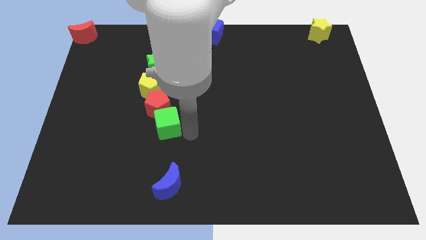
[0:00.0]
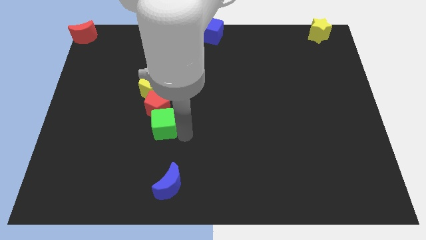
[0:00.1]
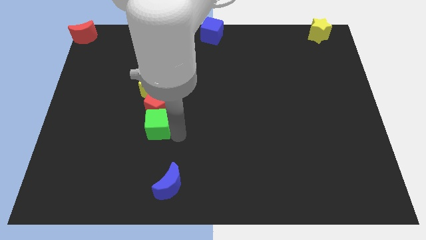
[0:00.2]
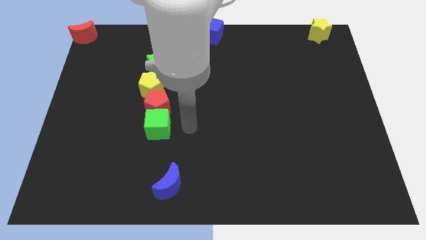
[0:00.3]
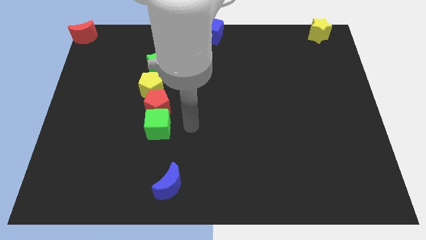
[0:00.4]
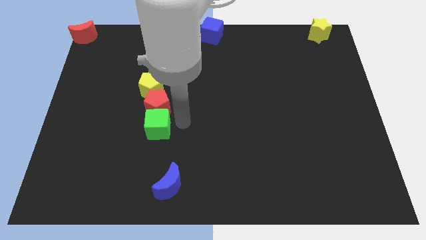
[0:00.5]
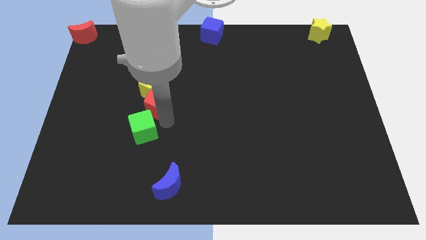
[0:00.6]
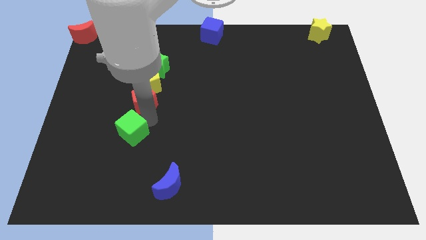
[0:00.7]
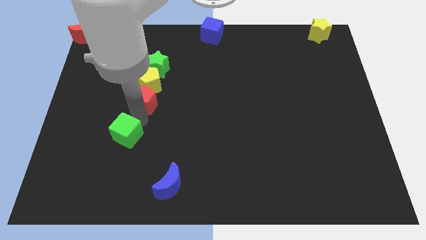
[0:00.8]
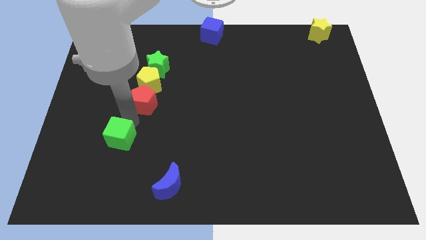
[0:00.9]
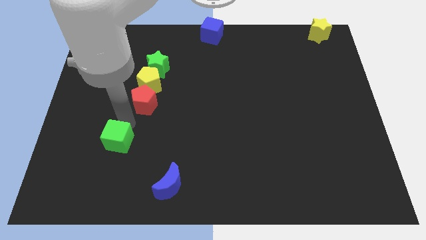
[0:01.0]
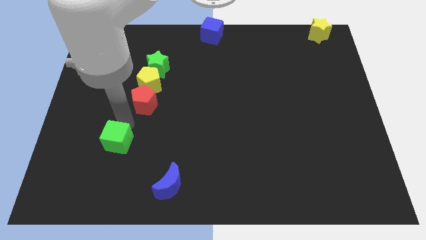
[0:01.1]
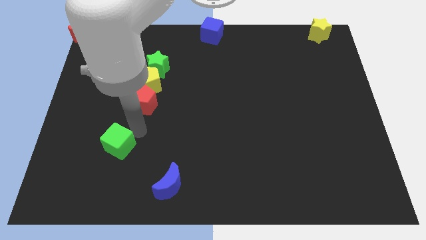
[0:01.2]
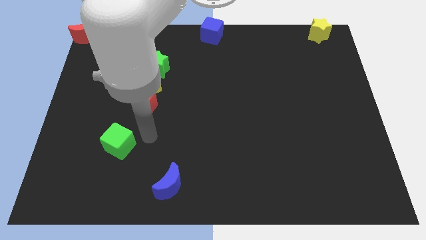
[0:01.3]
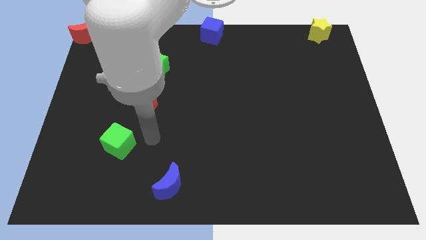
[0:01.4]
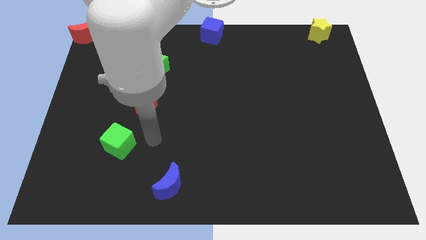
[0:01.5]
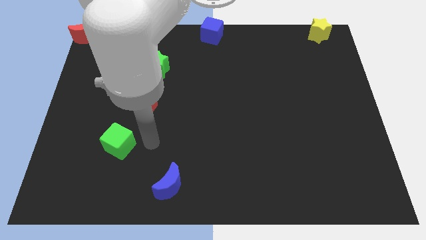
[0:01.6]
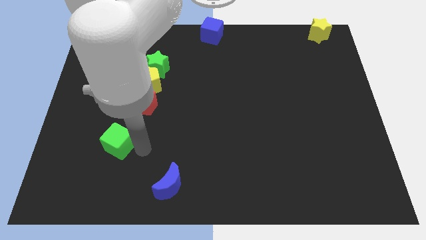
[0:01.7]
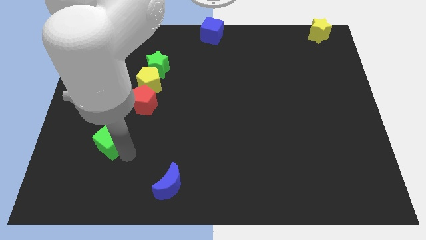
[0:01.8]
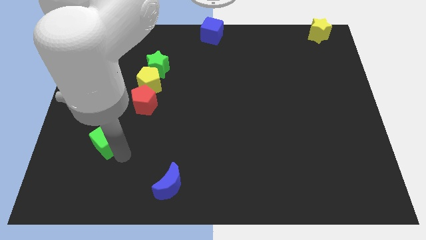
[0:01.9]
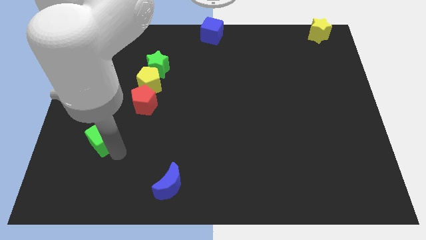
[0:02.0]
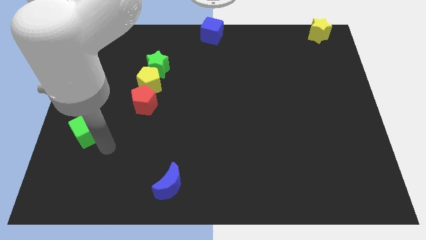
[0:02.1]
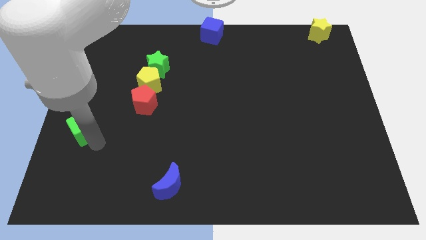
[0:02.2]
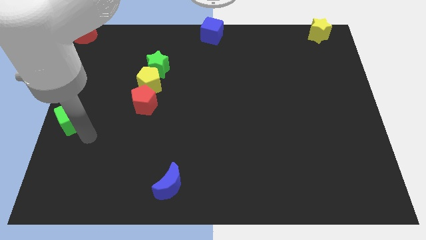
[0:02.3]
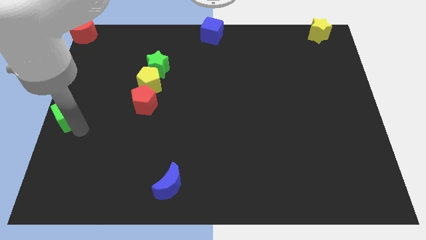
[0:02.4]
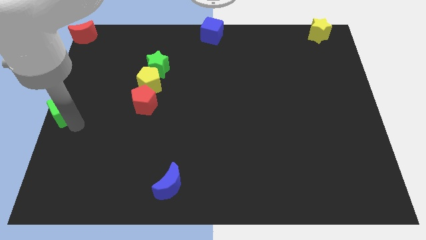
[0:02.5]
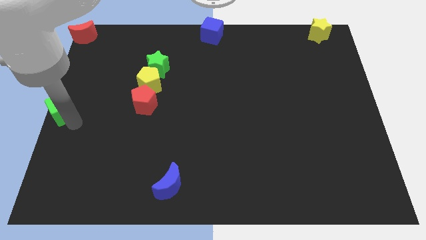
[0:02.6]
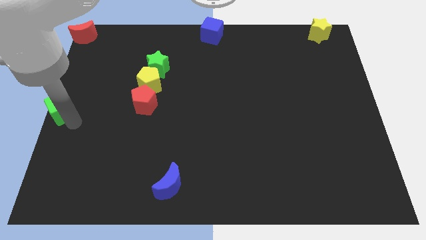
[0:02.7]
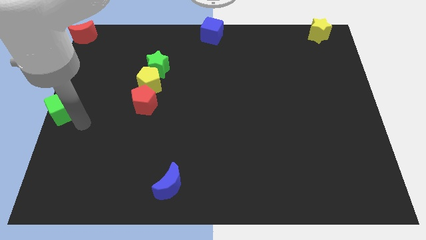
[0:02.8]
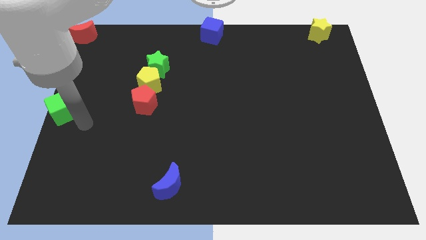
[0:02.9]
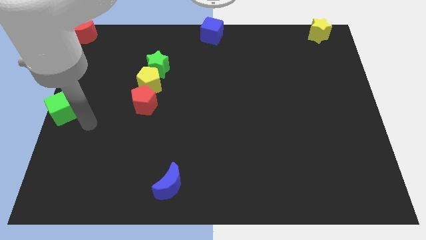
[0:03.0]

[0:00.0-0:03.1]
push the green cube to the left centre of the board

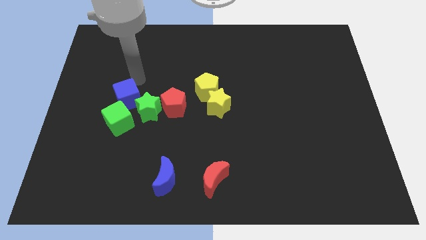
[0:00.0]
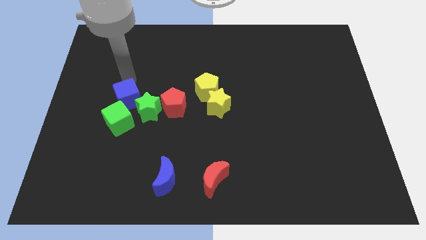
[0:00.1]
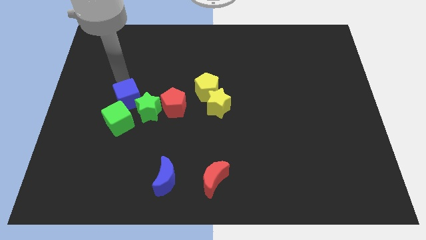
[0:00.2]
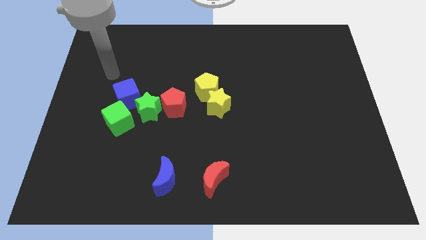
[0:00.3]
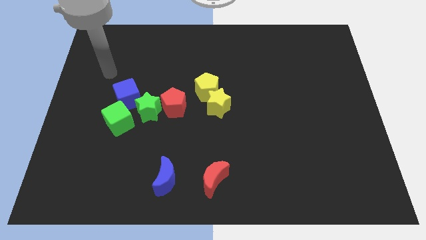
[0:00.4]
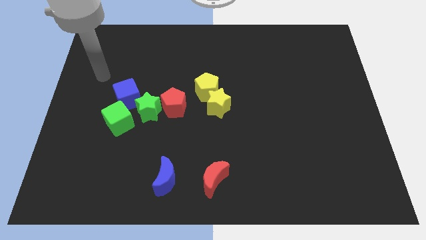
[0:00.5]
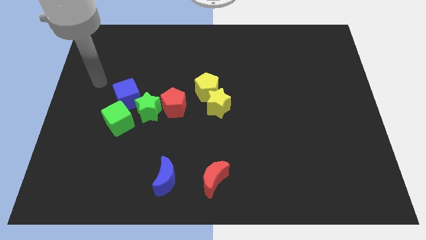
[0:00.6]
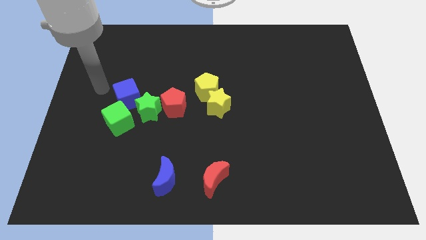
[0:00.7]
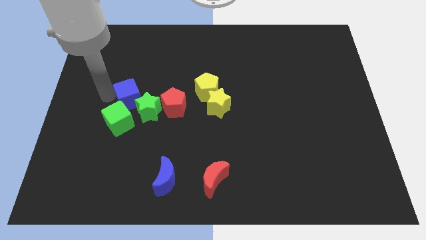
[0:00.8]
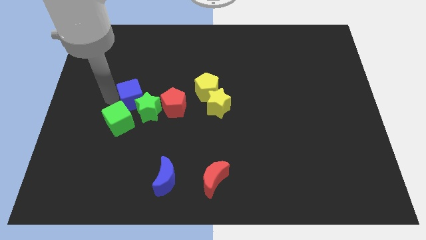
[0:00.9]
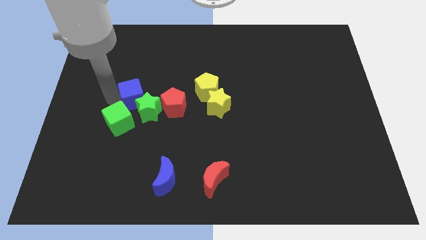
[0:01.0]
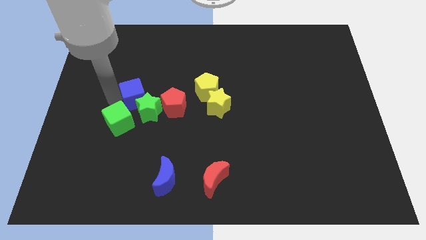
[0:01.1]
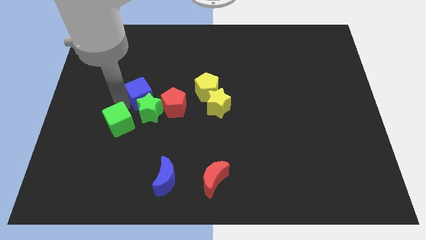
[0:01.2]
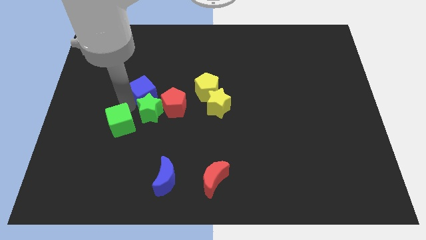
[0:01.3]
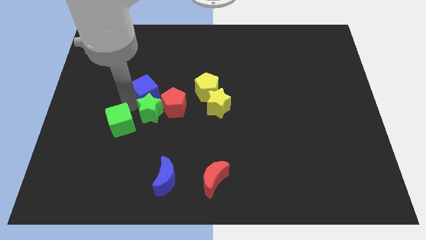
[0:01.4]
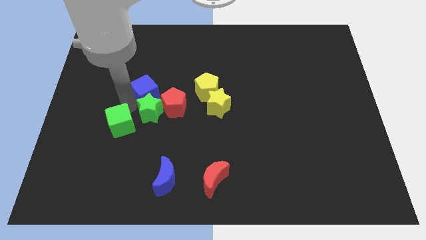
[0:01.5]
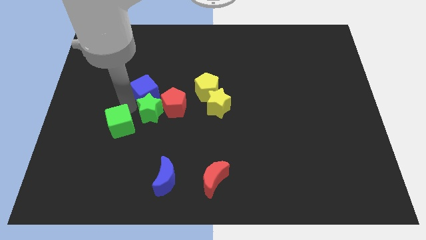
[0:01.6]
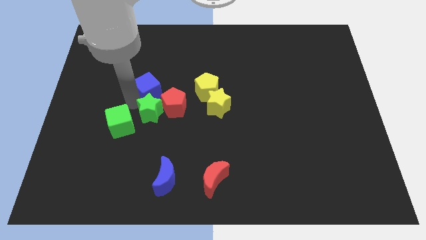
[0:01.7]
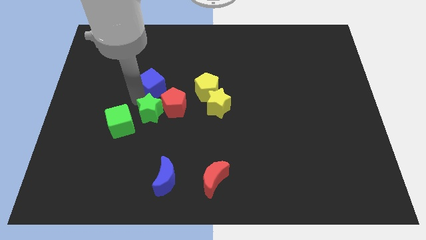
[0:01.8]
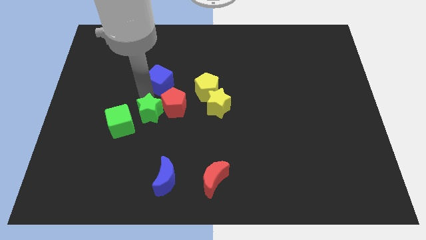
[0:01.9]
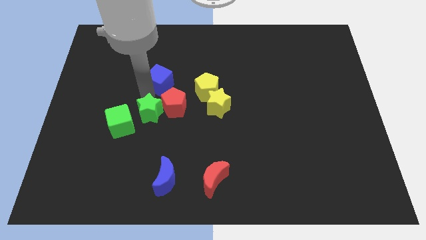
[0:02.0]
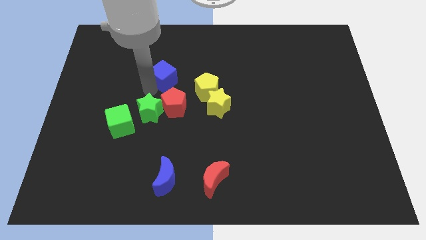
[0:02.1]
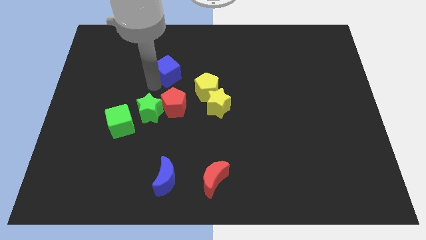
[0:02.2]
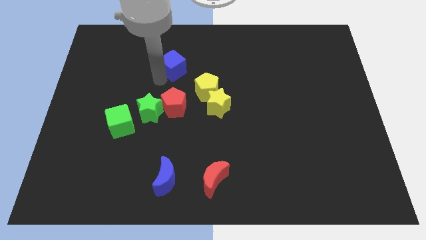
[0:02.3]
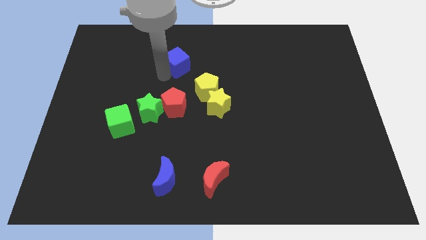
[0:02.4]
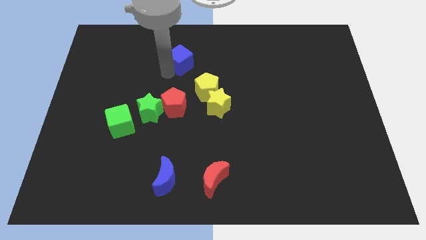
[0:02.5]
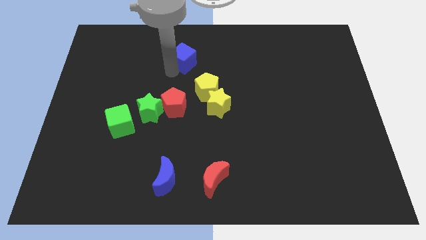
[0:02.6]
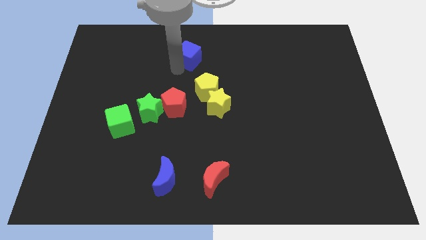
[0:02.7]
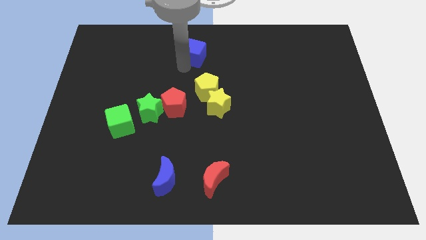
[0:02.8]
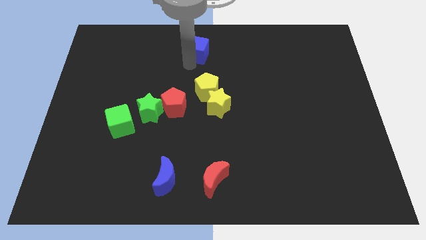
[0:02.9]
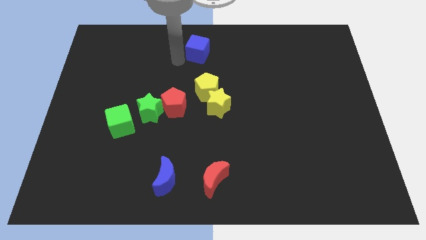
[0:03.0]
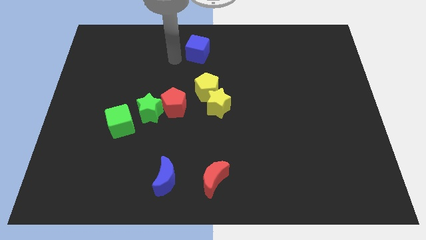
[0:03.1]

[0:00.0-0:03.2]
place the blue cube above the yellow pentagon

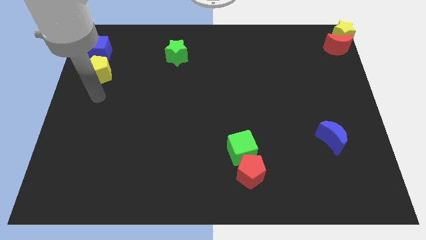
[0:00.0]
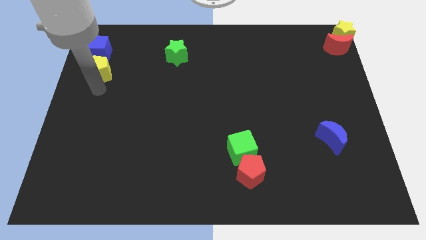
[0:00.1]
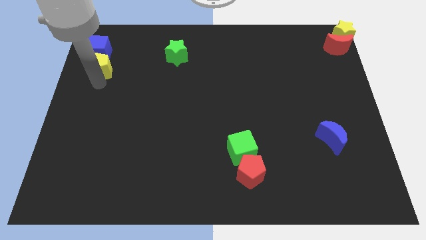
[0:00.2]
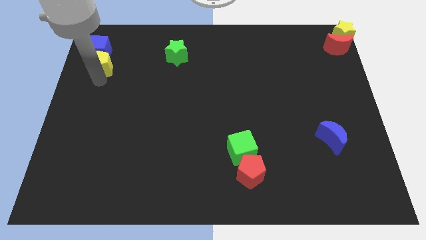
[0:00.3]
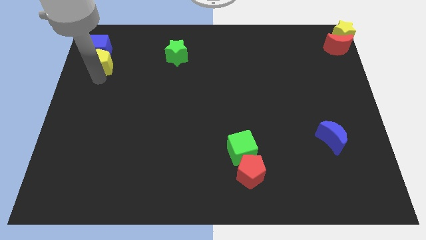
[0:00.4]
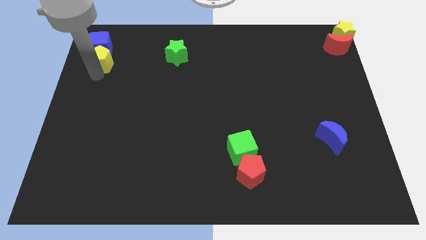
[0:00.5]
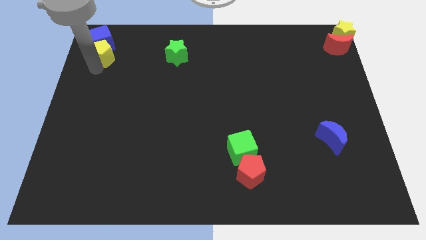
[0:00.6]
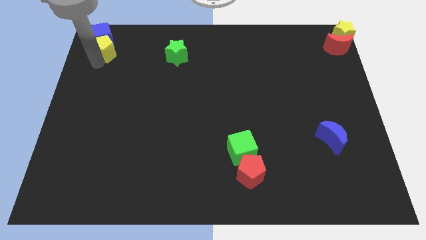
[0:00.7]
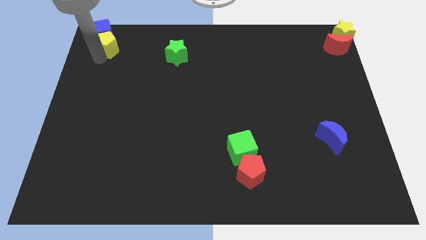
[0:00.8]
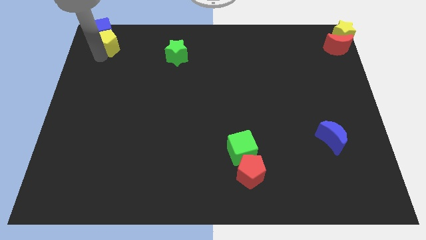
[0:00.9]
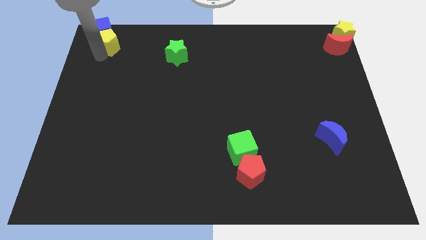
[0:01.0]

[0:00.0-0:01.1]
push yellow pentagon along with blue cube to the top left

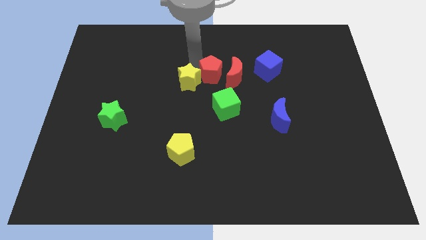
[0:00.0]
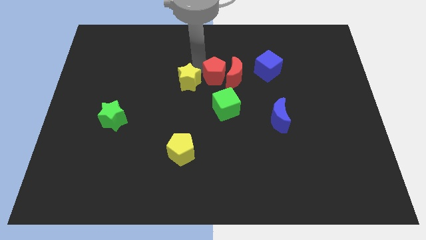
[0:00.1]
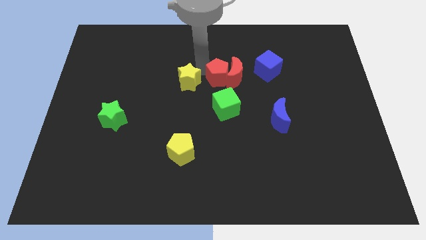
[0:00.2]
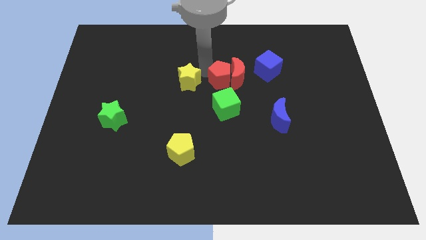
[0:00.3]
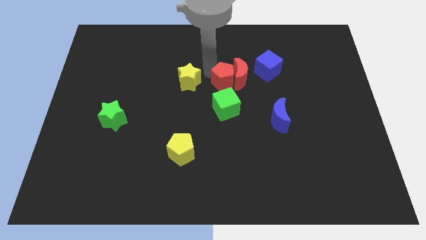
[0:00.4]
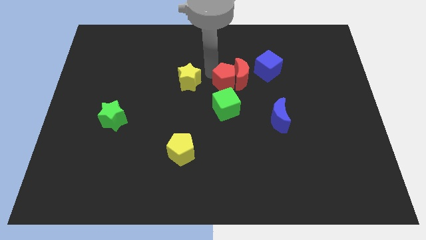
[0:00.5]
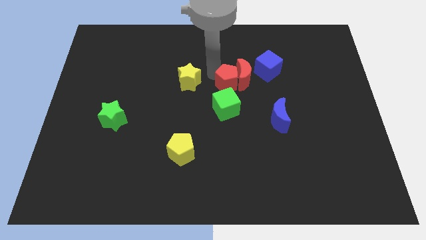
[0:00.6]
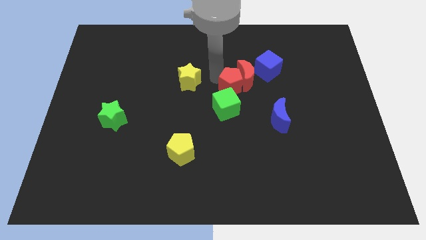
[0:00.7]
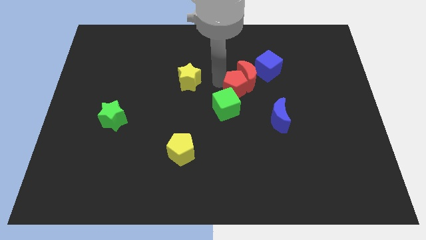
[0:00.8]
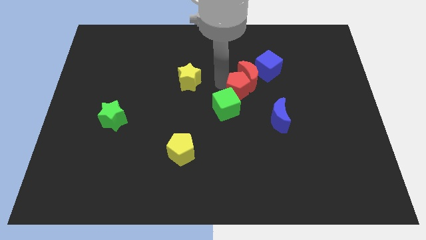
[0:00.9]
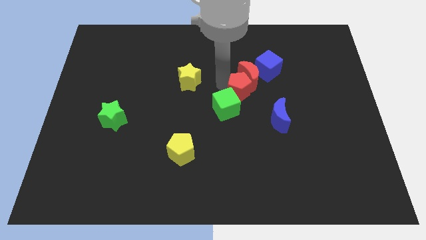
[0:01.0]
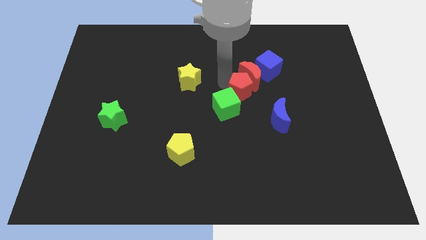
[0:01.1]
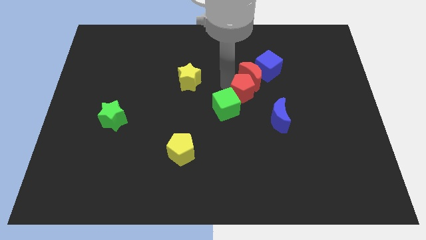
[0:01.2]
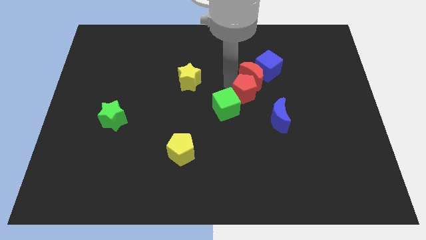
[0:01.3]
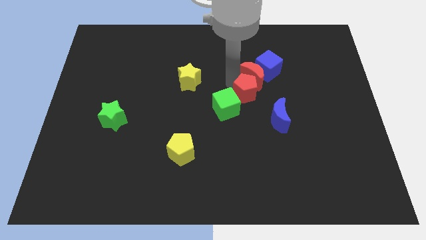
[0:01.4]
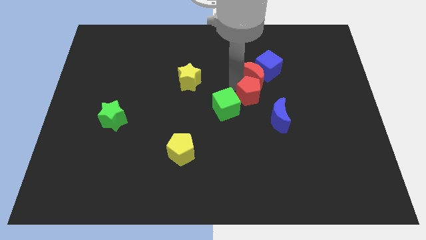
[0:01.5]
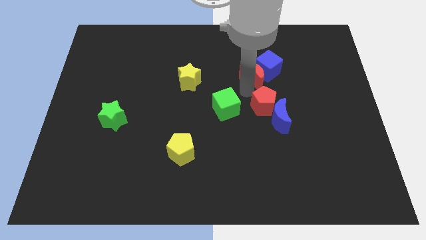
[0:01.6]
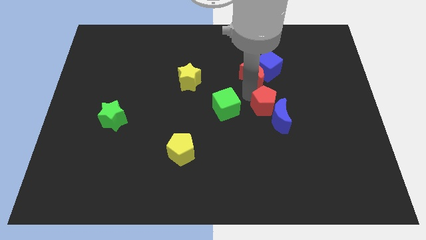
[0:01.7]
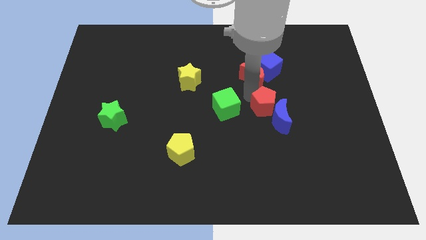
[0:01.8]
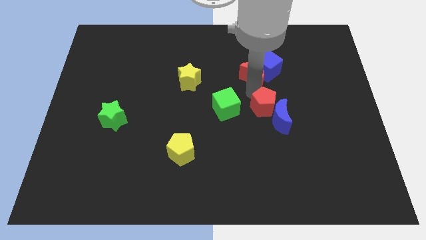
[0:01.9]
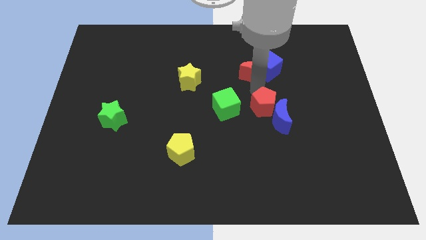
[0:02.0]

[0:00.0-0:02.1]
push the red pentagon into the blue moon
